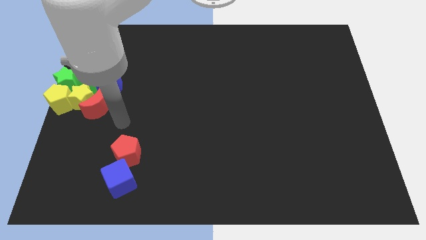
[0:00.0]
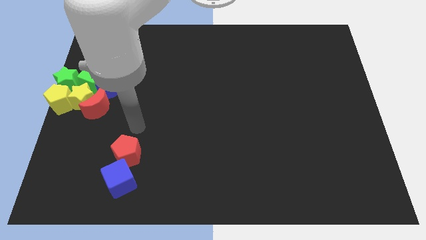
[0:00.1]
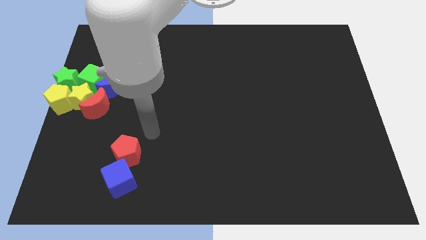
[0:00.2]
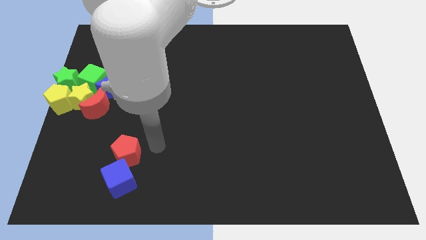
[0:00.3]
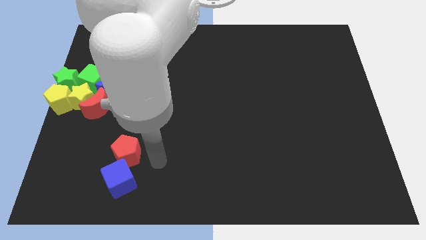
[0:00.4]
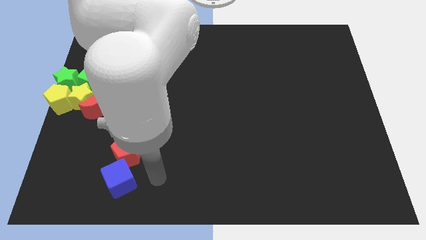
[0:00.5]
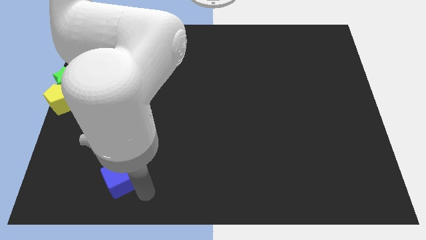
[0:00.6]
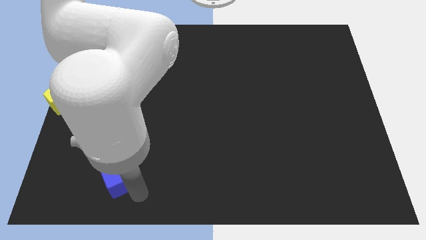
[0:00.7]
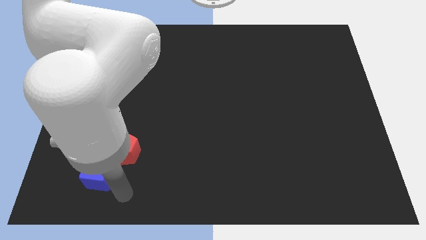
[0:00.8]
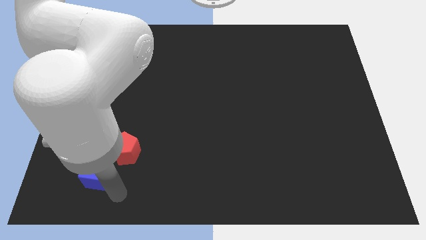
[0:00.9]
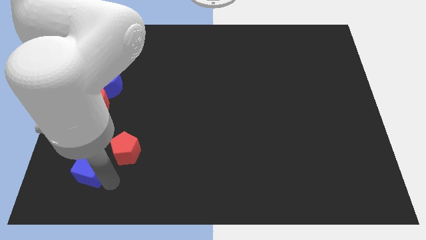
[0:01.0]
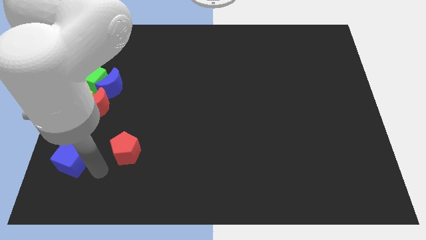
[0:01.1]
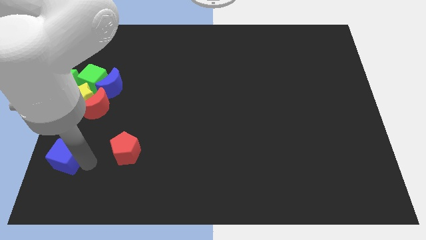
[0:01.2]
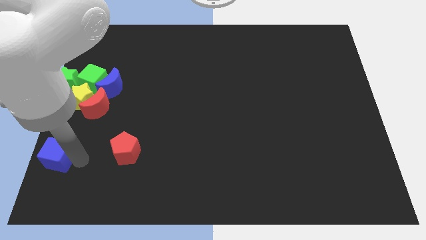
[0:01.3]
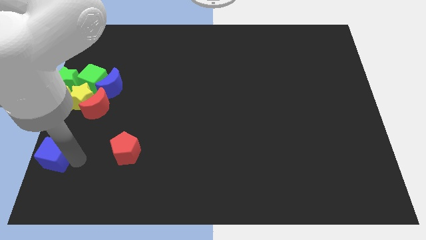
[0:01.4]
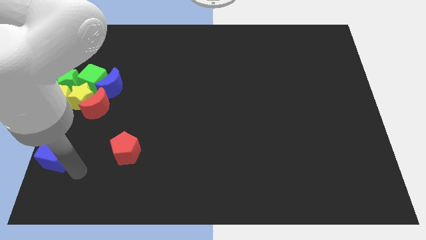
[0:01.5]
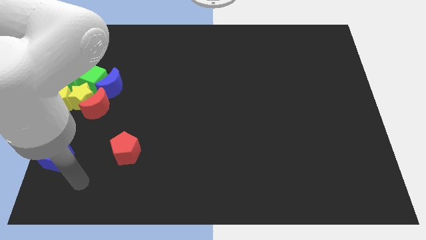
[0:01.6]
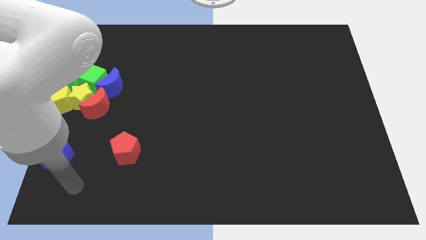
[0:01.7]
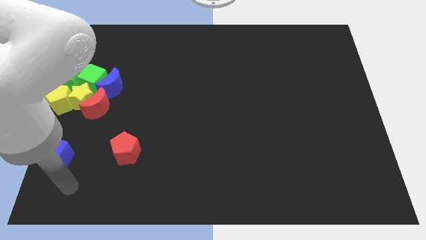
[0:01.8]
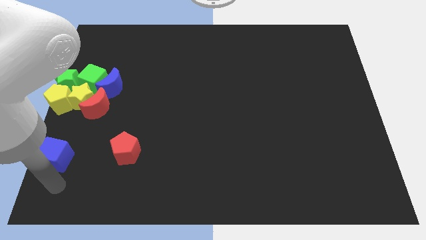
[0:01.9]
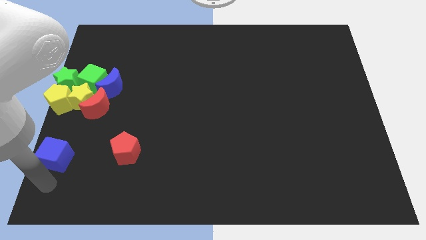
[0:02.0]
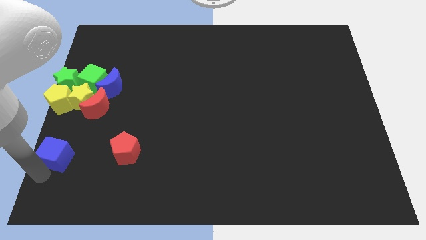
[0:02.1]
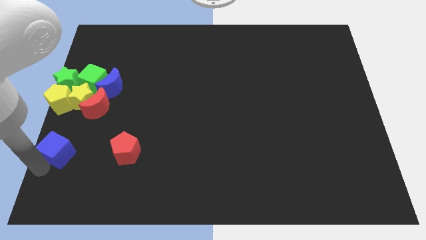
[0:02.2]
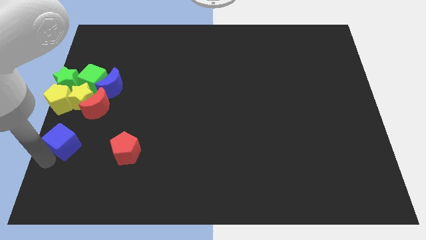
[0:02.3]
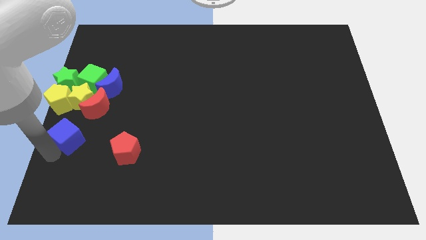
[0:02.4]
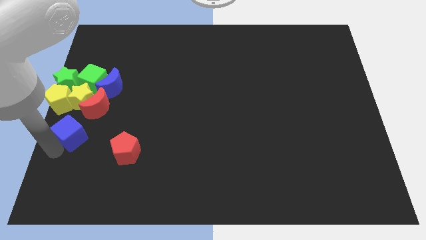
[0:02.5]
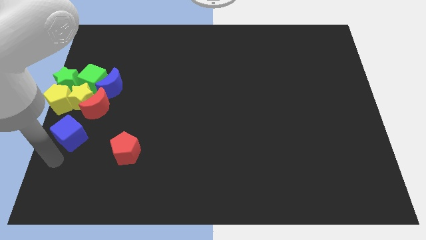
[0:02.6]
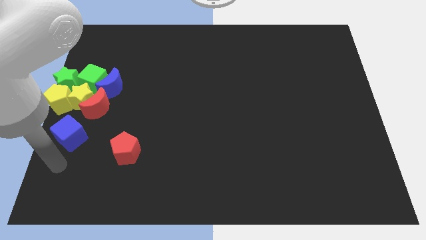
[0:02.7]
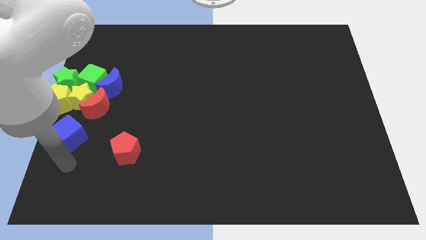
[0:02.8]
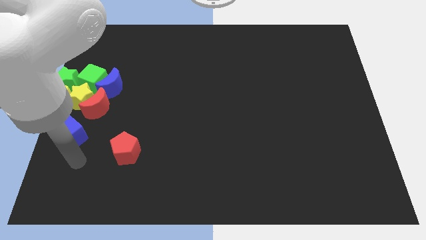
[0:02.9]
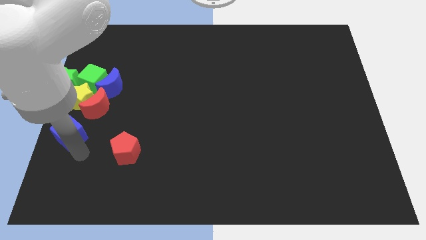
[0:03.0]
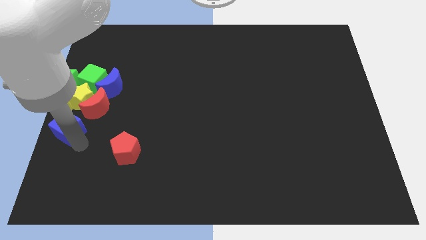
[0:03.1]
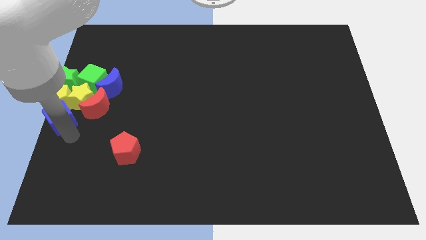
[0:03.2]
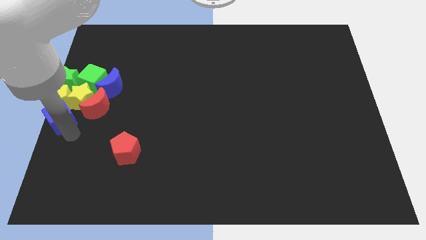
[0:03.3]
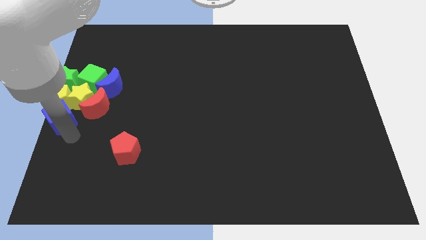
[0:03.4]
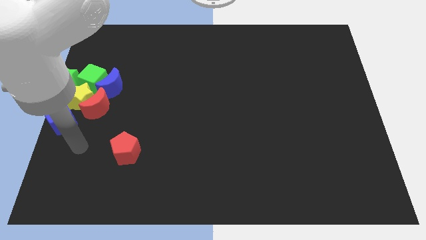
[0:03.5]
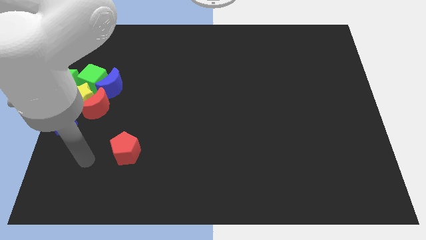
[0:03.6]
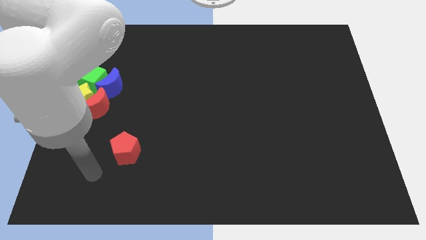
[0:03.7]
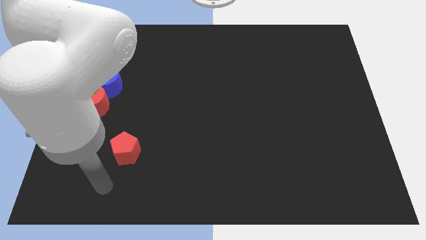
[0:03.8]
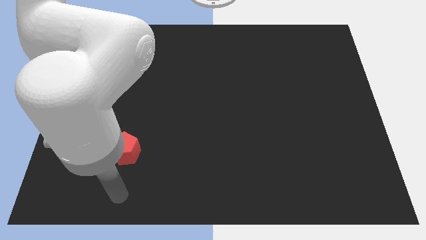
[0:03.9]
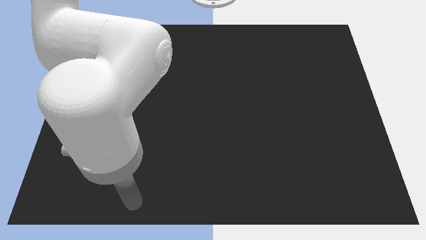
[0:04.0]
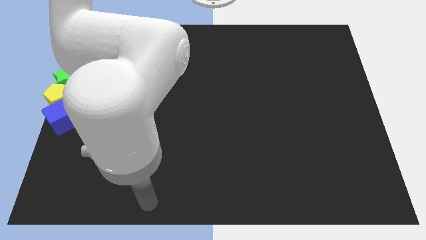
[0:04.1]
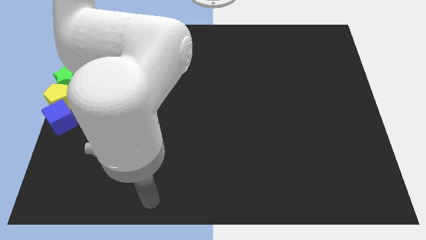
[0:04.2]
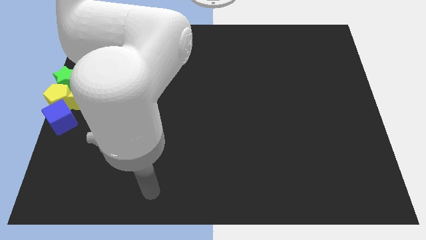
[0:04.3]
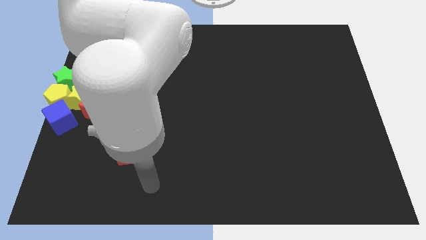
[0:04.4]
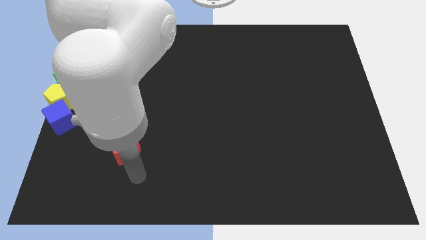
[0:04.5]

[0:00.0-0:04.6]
place the blue cube below the yellow pentagon

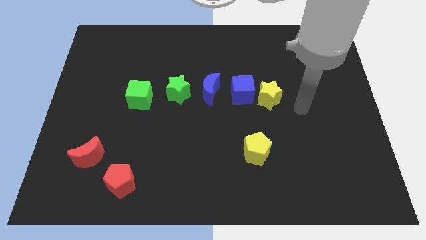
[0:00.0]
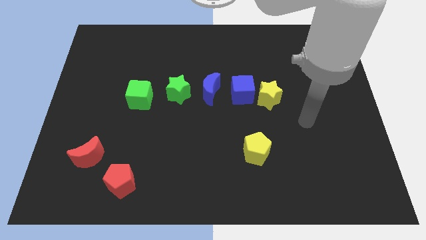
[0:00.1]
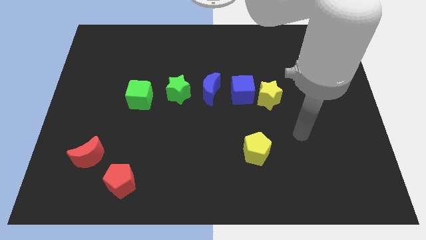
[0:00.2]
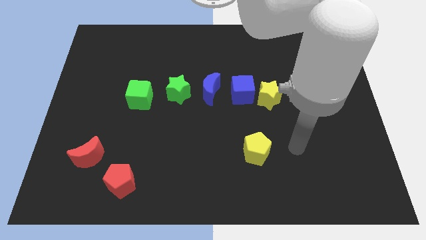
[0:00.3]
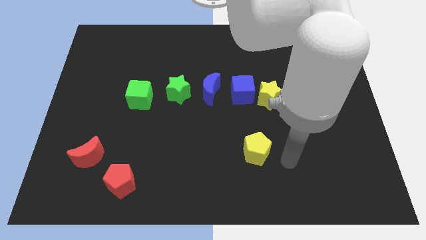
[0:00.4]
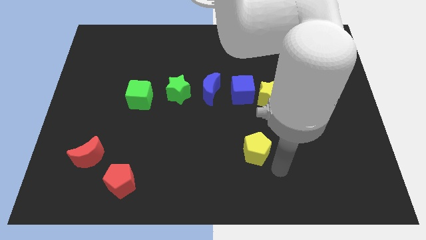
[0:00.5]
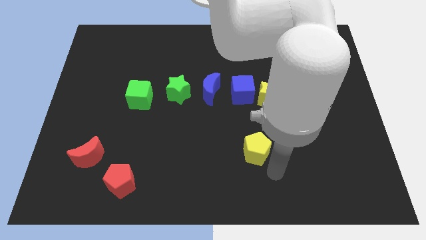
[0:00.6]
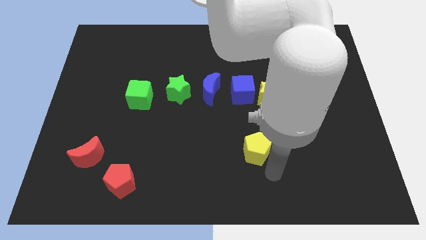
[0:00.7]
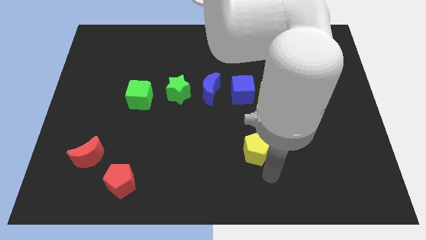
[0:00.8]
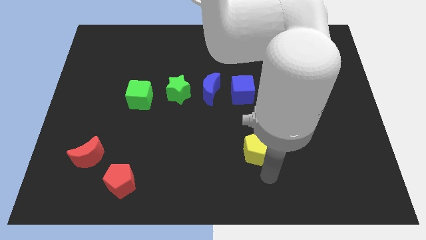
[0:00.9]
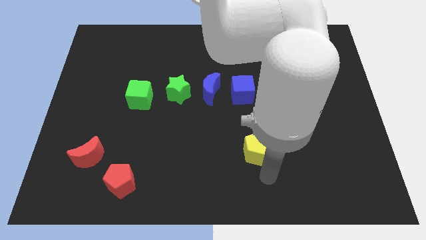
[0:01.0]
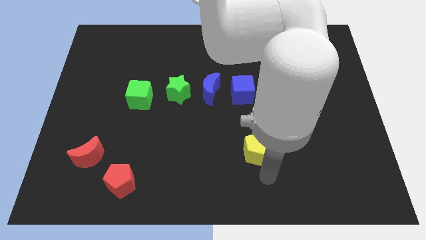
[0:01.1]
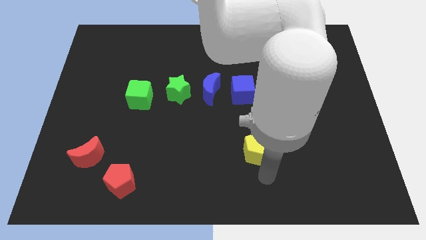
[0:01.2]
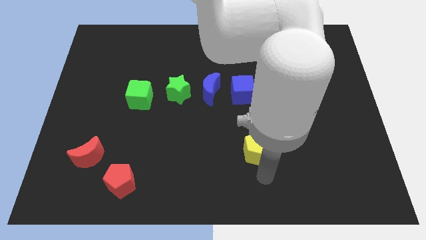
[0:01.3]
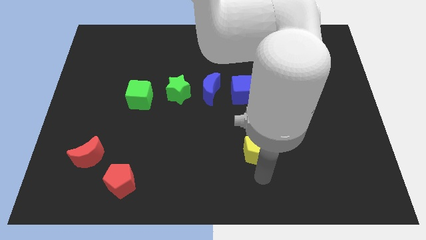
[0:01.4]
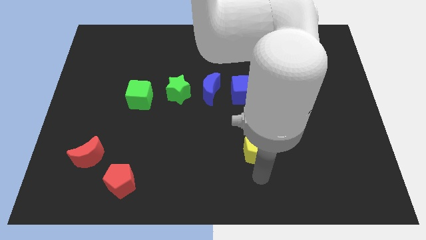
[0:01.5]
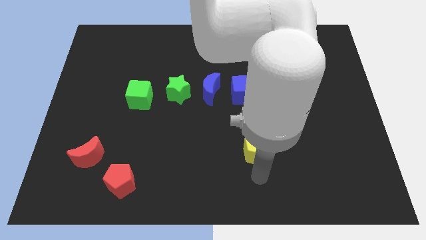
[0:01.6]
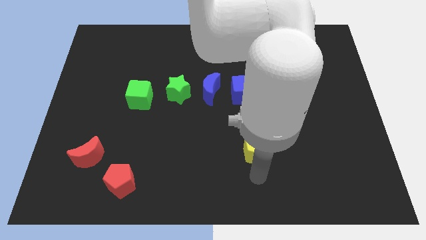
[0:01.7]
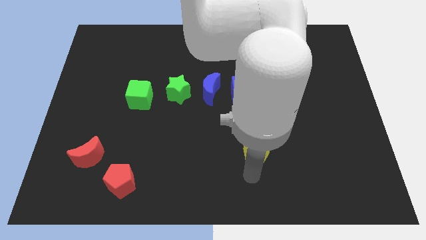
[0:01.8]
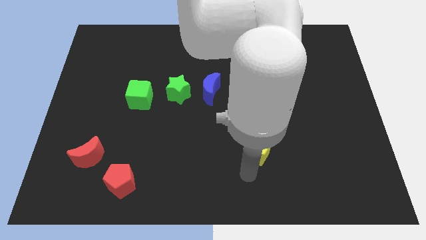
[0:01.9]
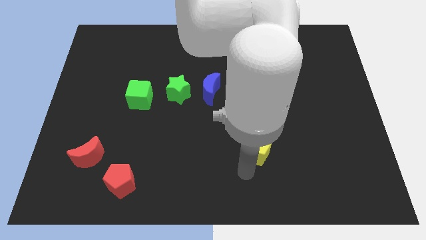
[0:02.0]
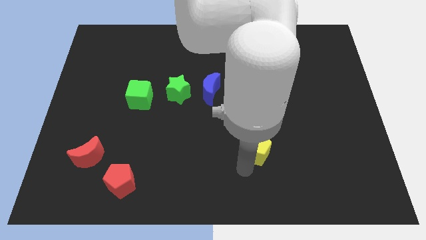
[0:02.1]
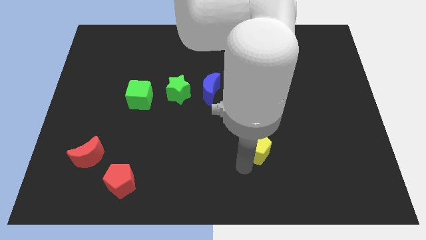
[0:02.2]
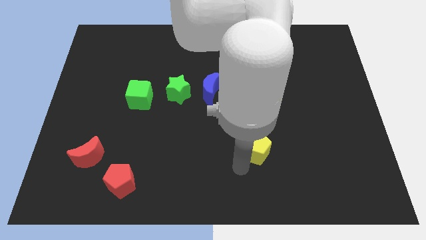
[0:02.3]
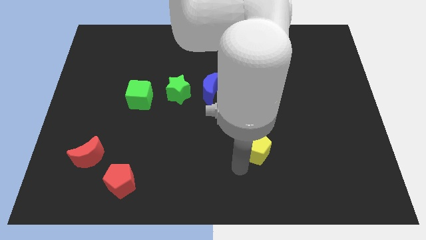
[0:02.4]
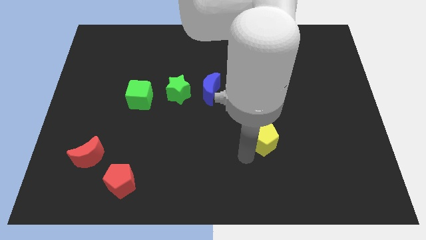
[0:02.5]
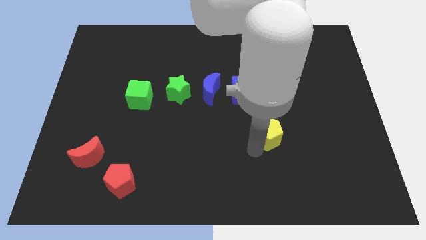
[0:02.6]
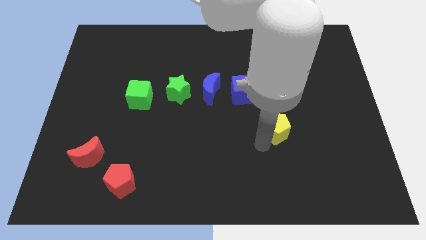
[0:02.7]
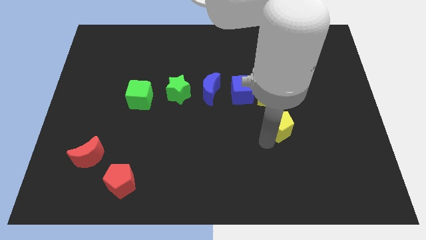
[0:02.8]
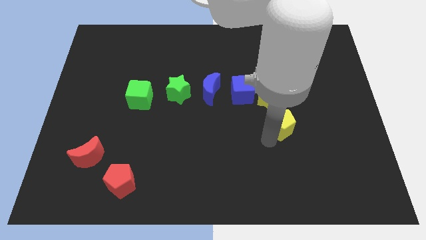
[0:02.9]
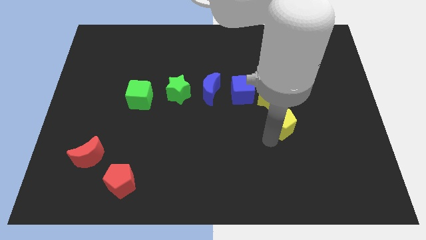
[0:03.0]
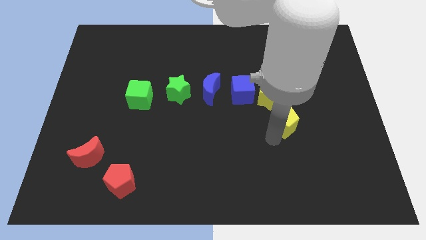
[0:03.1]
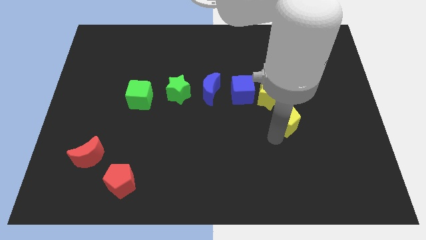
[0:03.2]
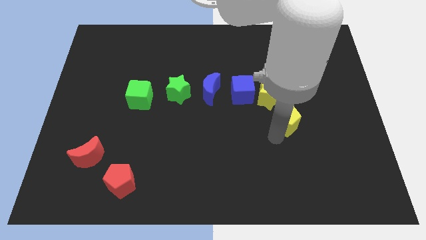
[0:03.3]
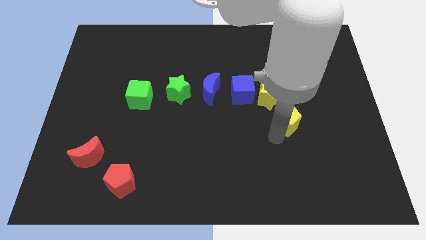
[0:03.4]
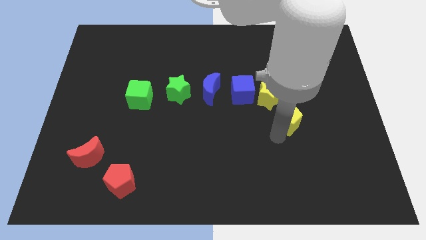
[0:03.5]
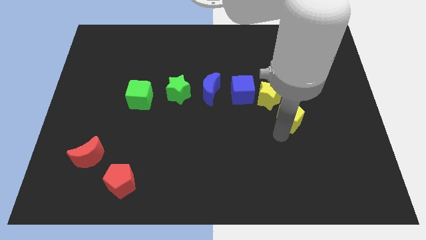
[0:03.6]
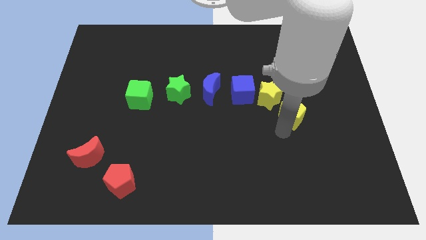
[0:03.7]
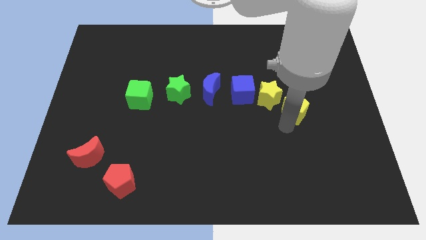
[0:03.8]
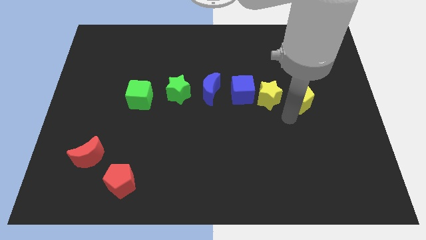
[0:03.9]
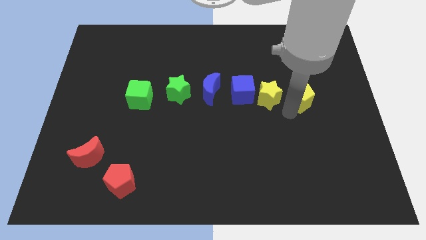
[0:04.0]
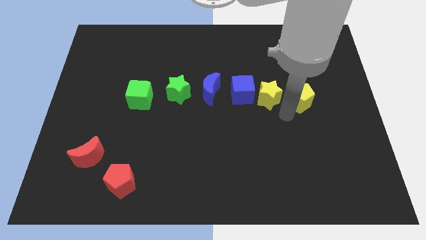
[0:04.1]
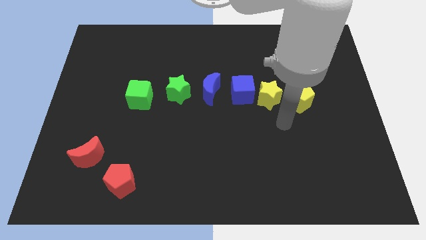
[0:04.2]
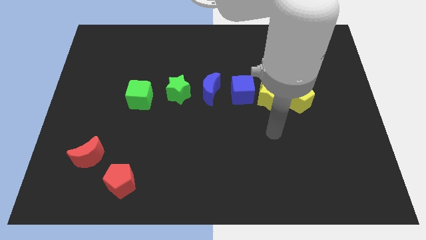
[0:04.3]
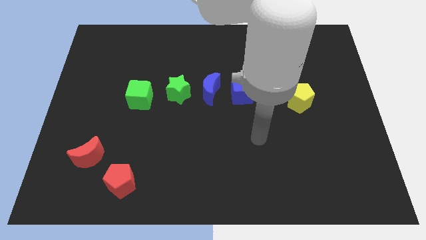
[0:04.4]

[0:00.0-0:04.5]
push the yellow pentagon to the right of the yellow star
